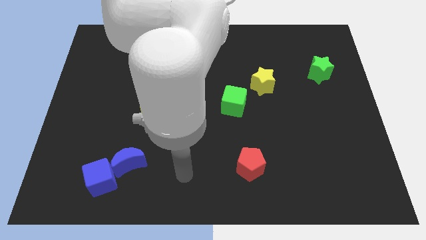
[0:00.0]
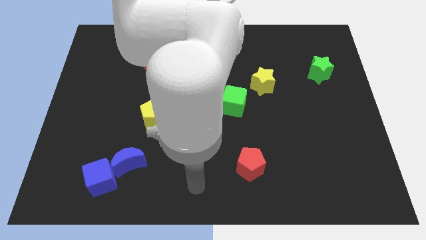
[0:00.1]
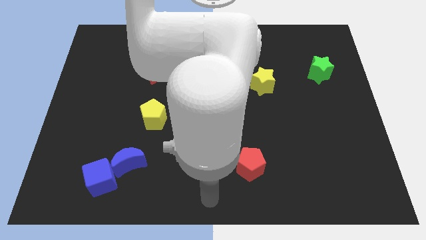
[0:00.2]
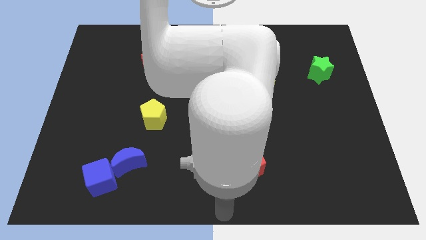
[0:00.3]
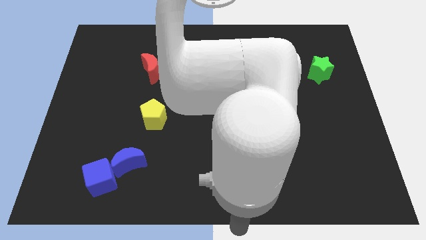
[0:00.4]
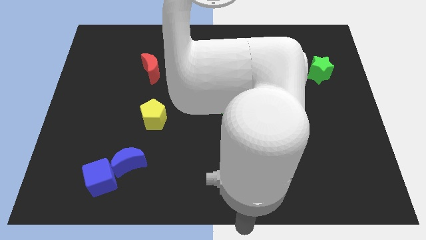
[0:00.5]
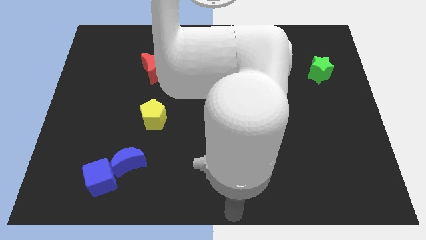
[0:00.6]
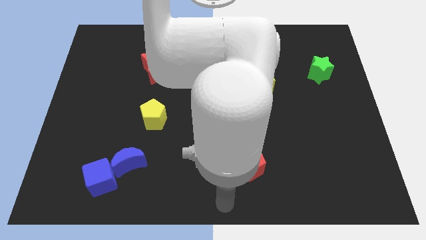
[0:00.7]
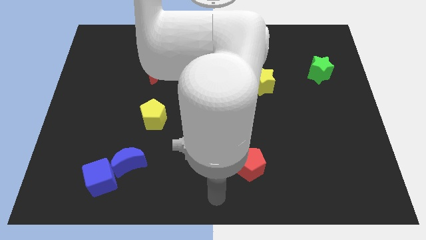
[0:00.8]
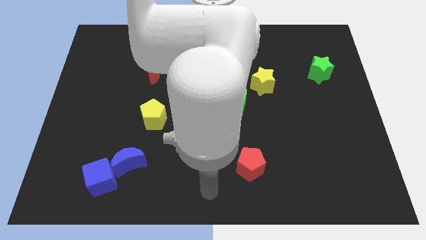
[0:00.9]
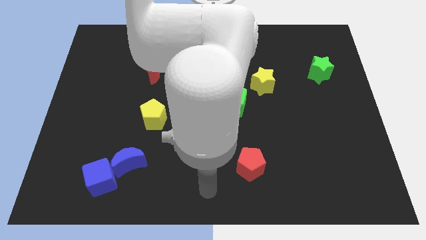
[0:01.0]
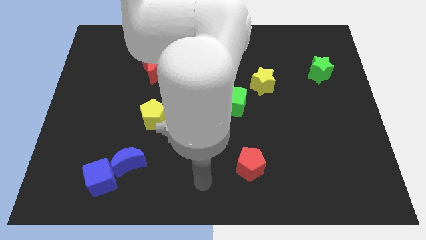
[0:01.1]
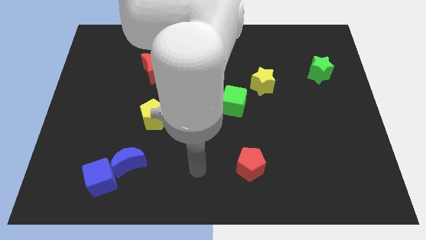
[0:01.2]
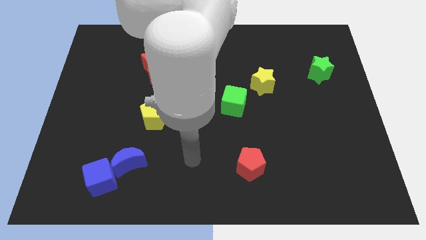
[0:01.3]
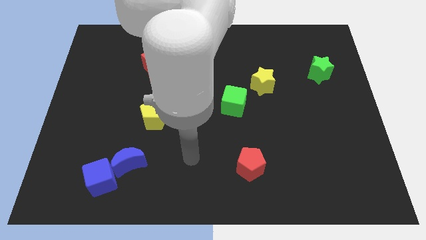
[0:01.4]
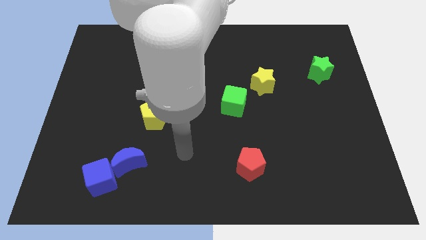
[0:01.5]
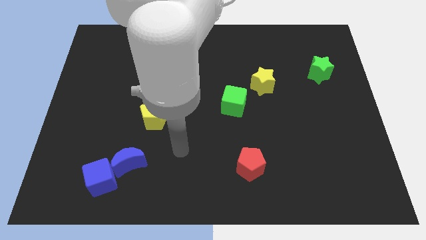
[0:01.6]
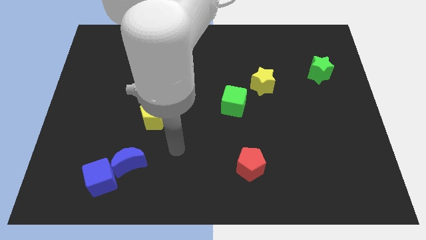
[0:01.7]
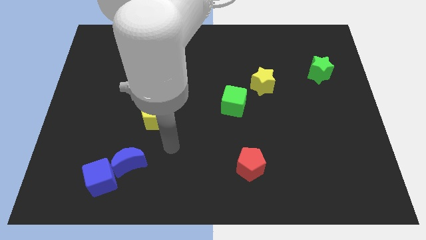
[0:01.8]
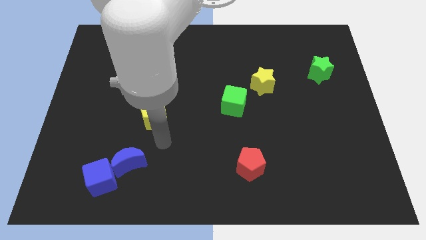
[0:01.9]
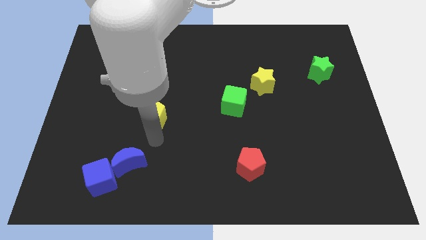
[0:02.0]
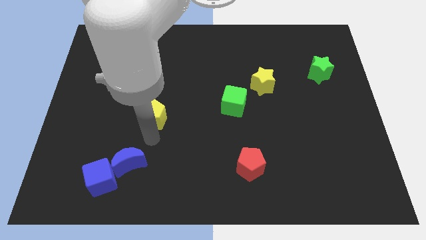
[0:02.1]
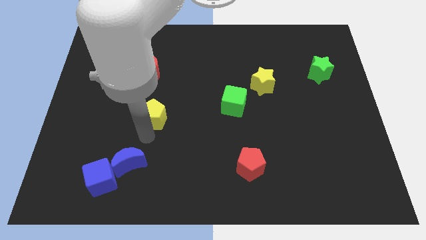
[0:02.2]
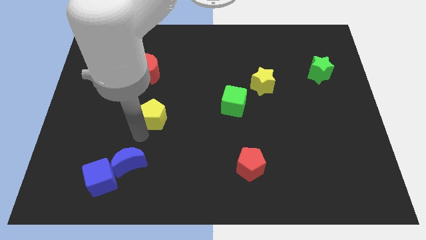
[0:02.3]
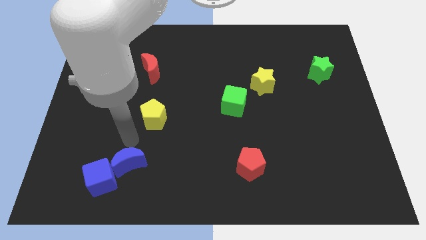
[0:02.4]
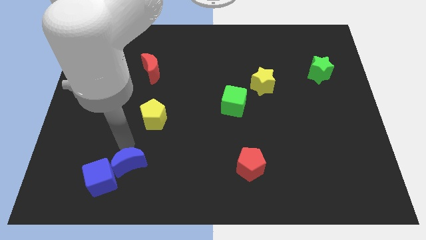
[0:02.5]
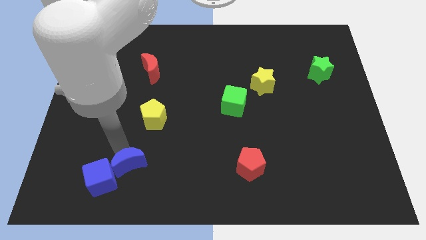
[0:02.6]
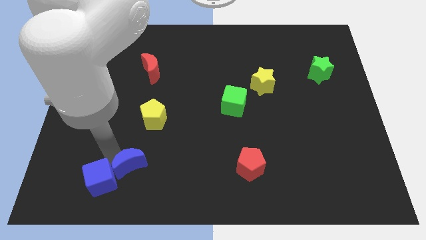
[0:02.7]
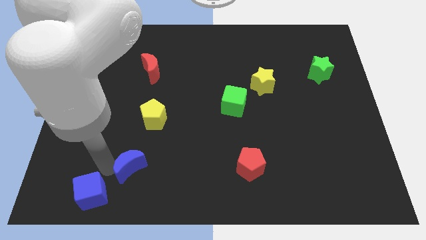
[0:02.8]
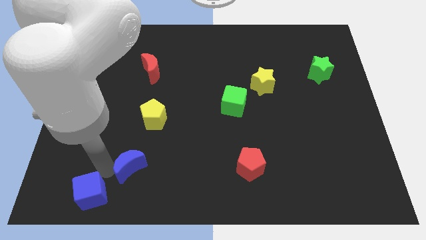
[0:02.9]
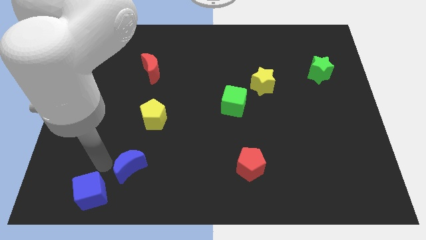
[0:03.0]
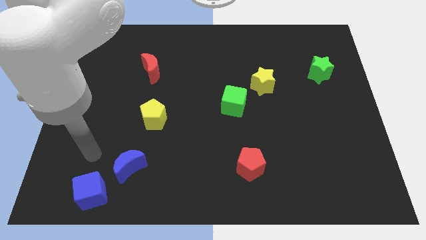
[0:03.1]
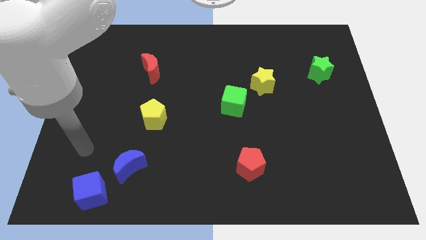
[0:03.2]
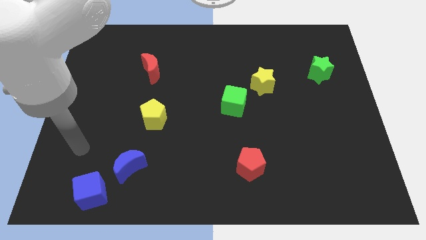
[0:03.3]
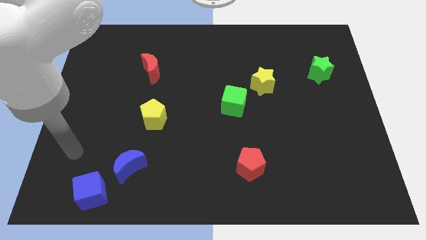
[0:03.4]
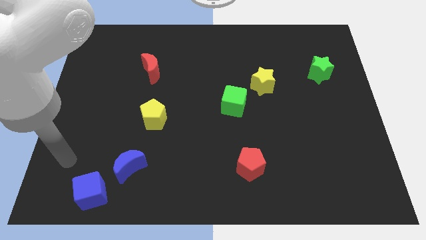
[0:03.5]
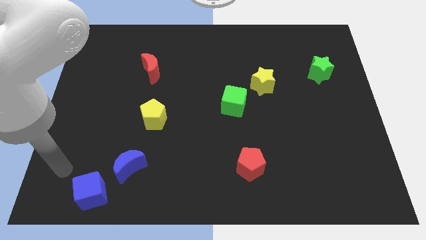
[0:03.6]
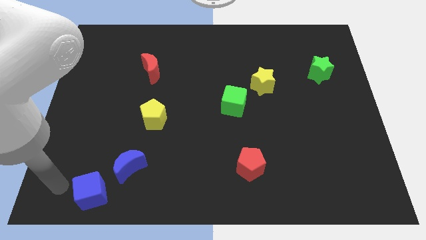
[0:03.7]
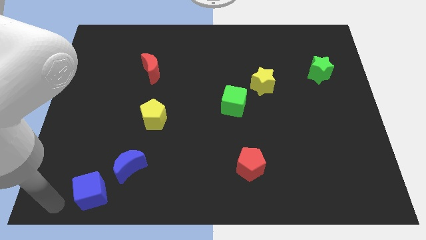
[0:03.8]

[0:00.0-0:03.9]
separate blue moon from the blue cube

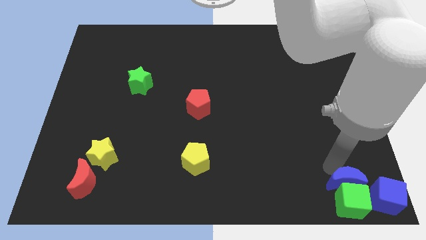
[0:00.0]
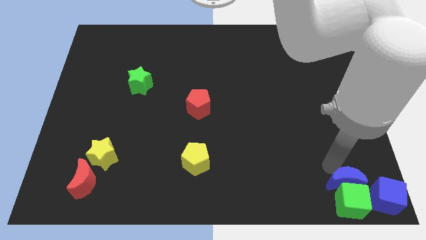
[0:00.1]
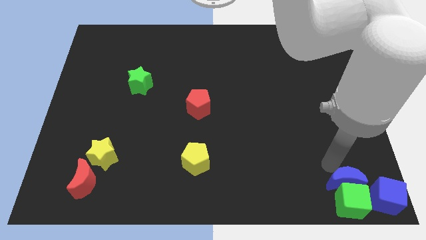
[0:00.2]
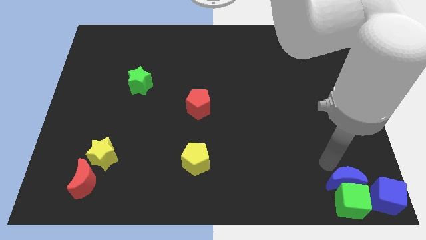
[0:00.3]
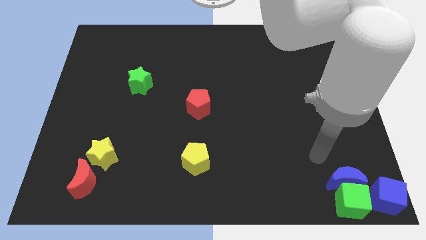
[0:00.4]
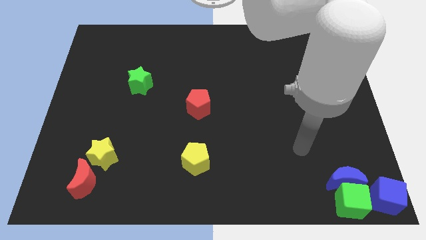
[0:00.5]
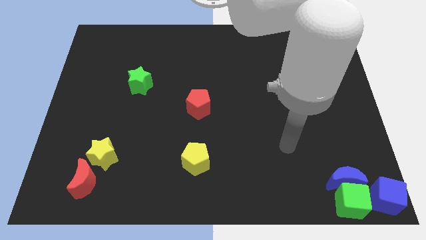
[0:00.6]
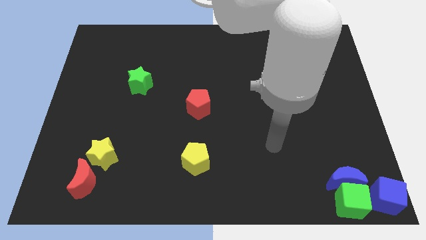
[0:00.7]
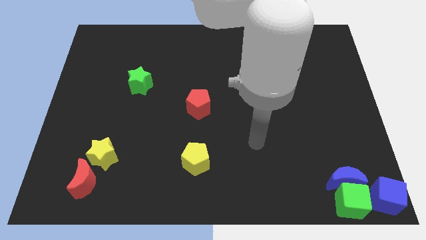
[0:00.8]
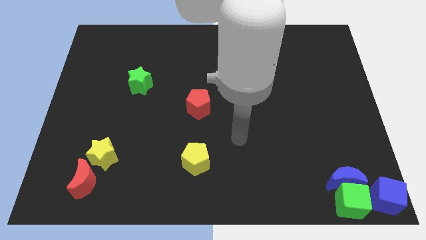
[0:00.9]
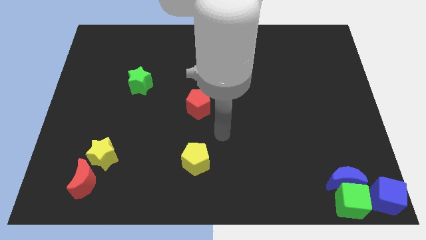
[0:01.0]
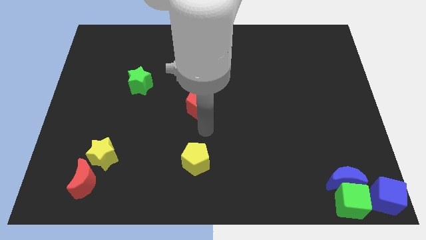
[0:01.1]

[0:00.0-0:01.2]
move the arm away from the blue moon

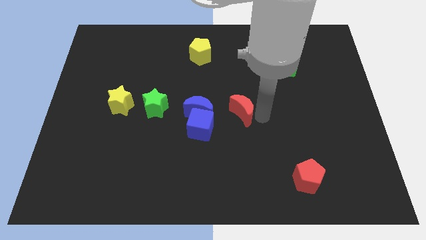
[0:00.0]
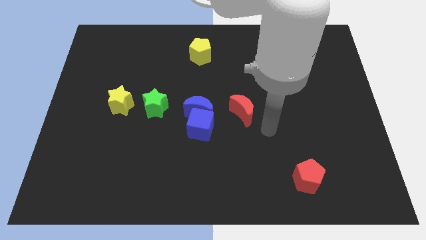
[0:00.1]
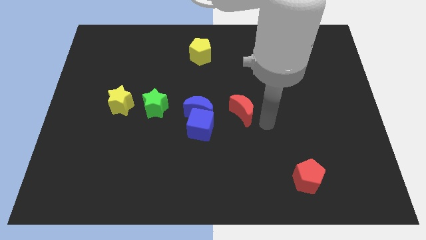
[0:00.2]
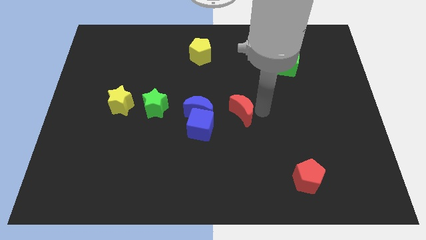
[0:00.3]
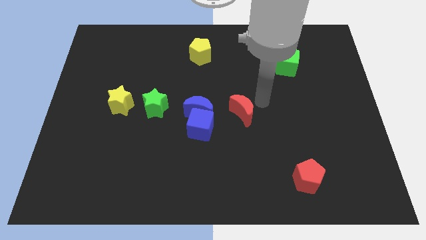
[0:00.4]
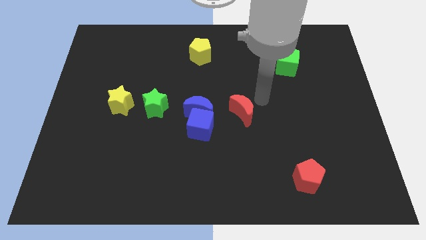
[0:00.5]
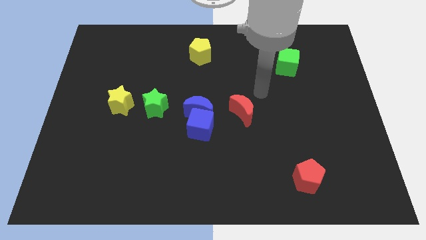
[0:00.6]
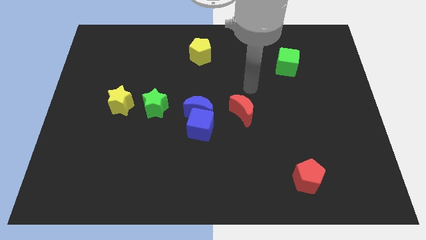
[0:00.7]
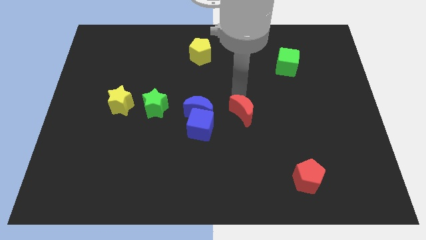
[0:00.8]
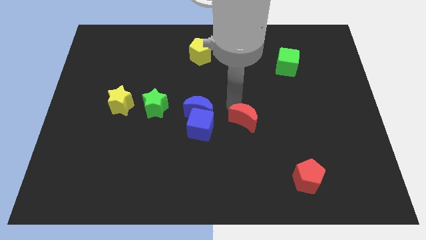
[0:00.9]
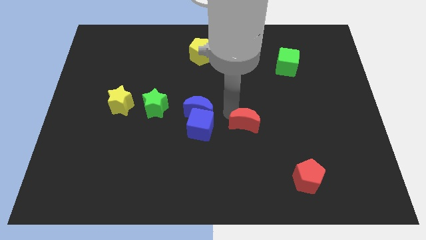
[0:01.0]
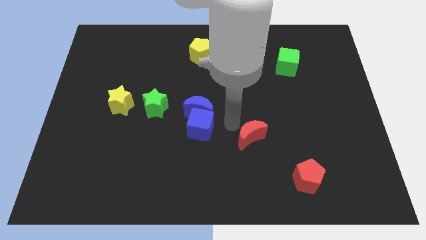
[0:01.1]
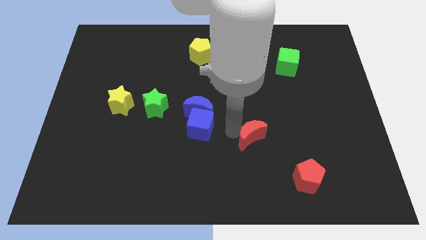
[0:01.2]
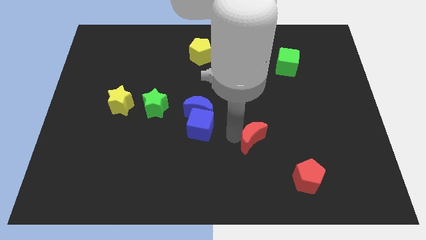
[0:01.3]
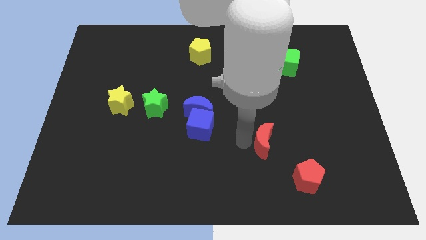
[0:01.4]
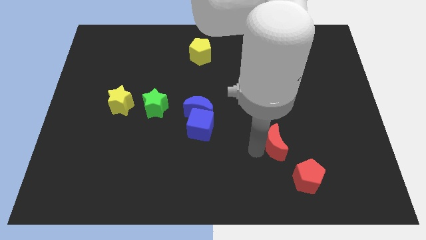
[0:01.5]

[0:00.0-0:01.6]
move the red moon near to the top side of the red pentagon

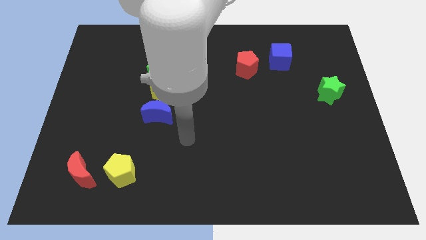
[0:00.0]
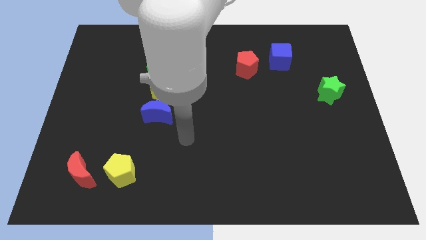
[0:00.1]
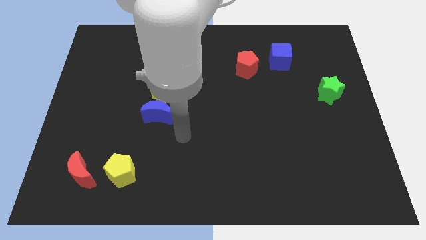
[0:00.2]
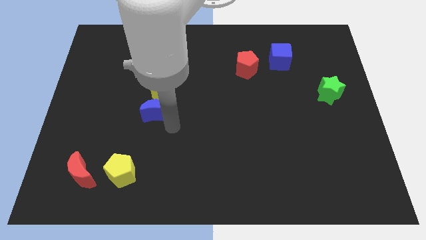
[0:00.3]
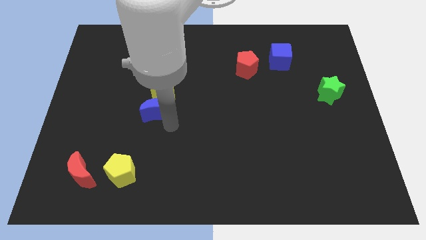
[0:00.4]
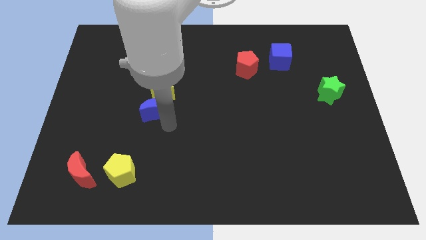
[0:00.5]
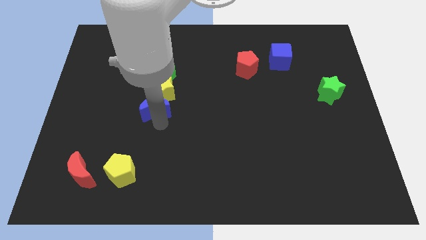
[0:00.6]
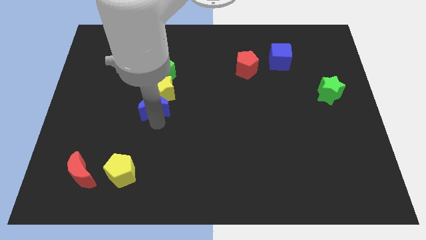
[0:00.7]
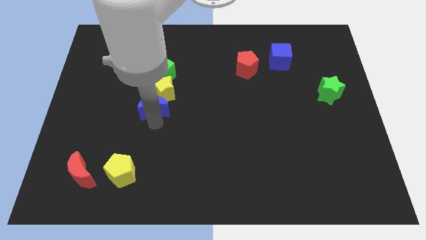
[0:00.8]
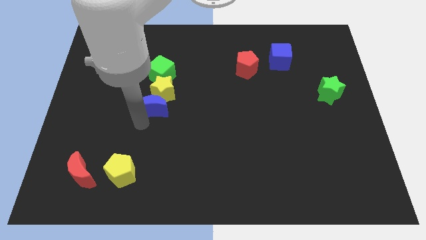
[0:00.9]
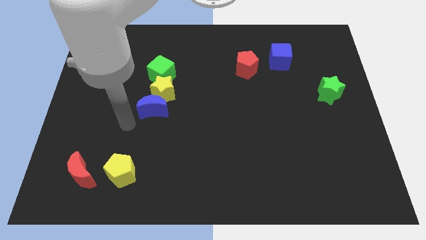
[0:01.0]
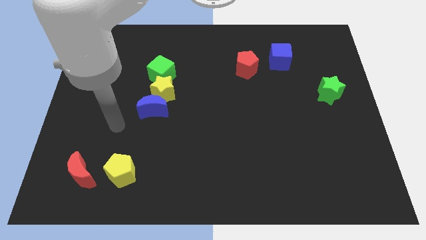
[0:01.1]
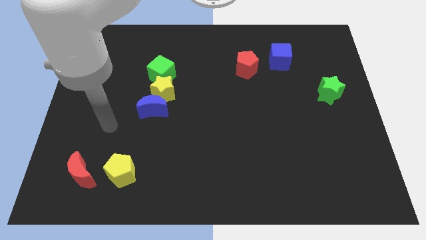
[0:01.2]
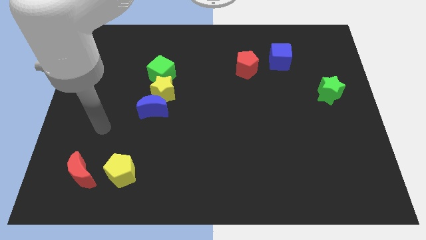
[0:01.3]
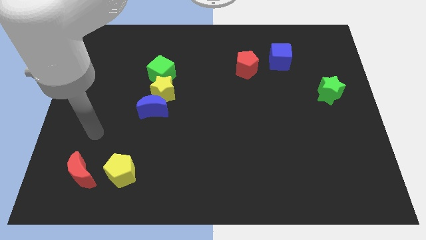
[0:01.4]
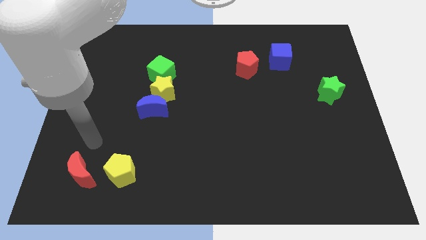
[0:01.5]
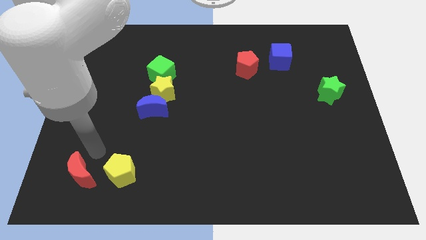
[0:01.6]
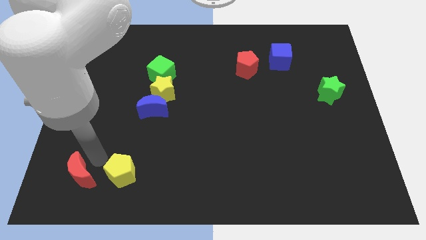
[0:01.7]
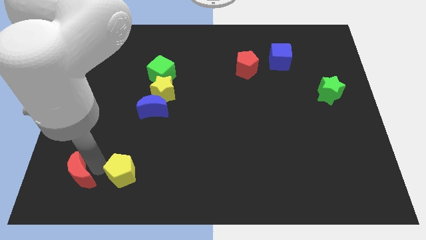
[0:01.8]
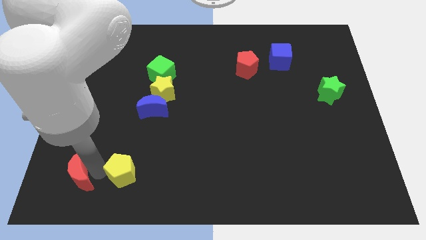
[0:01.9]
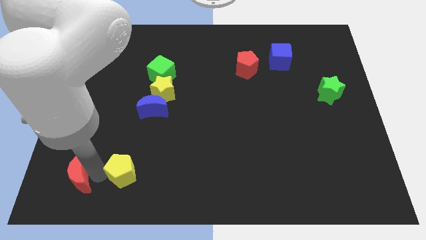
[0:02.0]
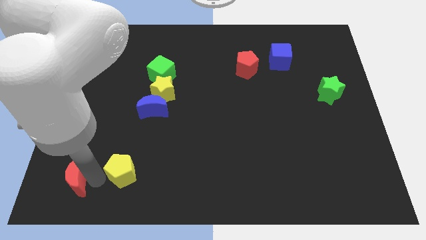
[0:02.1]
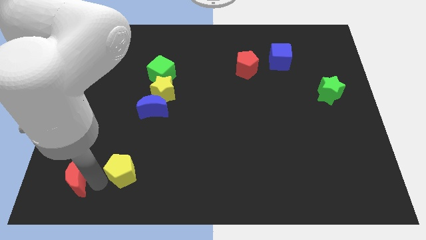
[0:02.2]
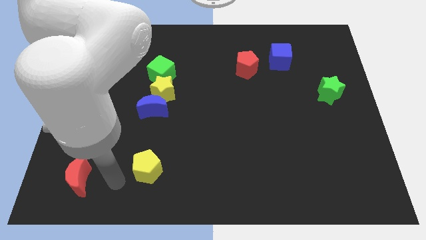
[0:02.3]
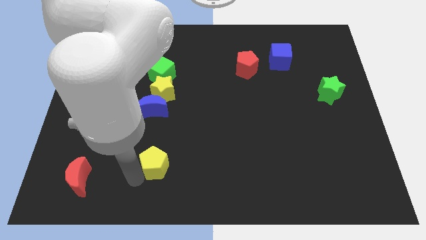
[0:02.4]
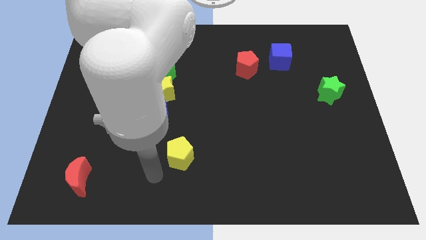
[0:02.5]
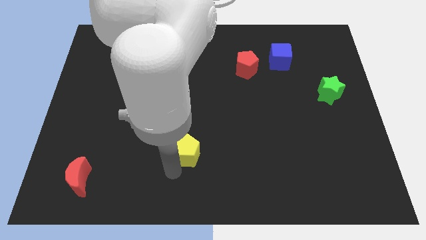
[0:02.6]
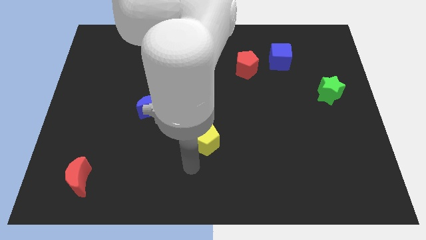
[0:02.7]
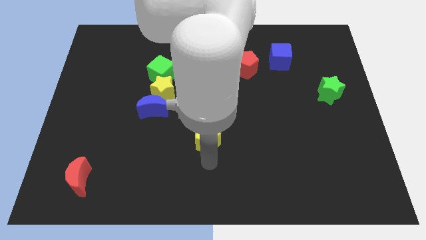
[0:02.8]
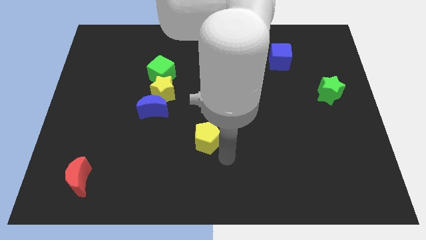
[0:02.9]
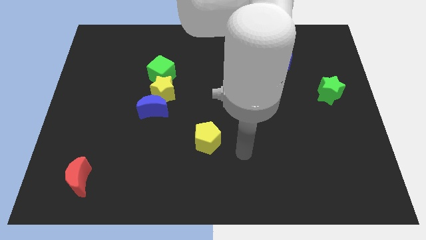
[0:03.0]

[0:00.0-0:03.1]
slide the yellow pentagon towards the center
